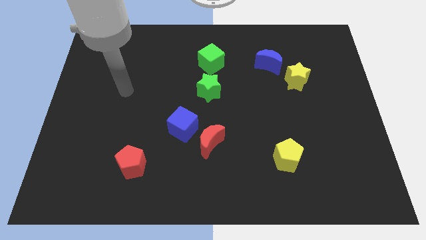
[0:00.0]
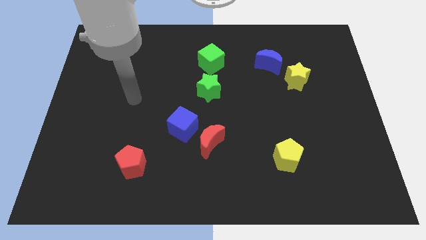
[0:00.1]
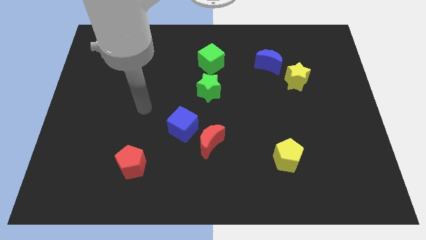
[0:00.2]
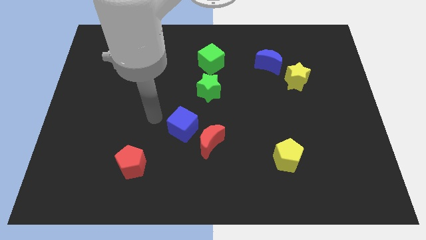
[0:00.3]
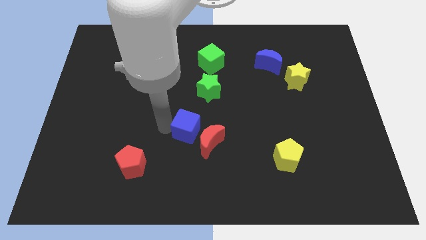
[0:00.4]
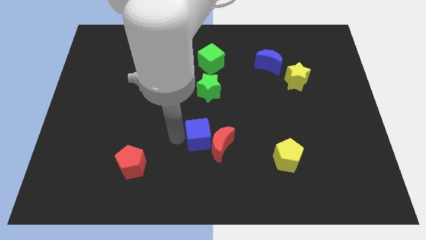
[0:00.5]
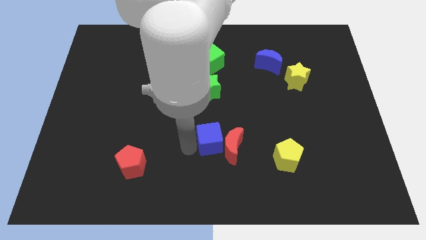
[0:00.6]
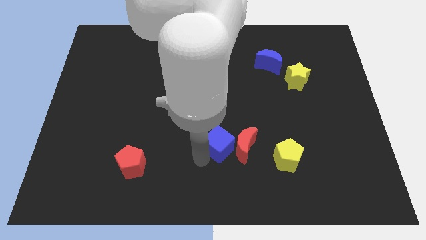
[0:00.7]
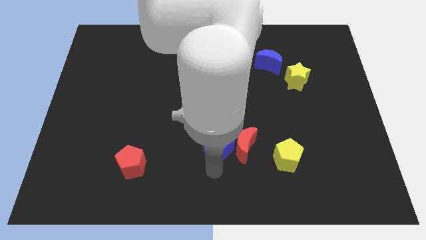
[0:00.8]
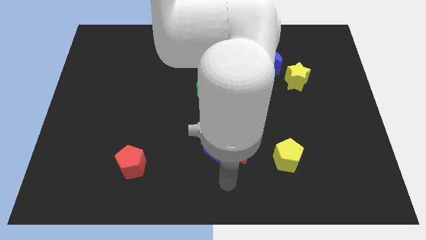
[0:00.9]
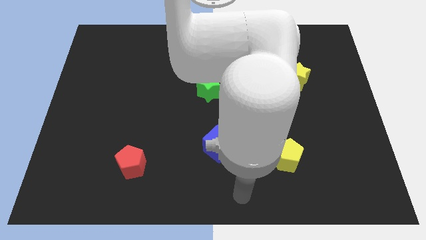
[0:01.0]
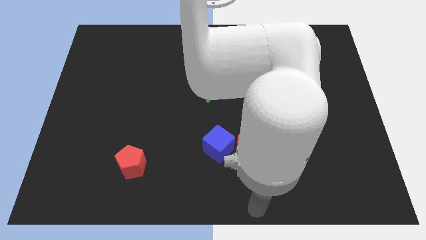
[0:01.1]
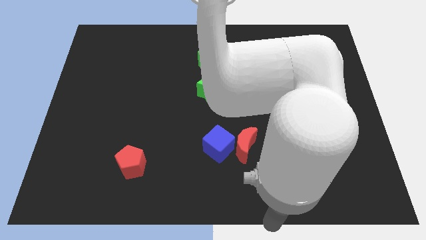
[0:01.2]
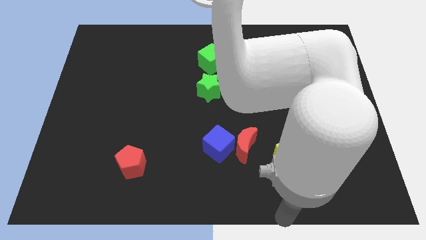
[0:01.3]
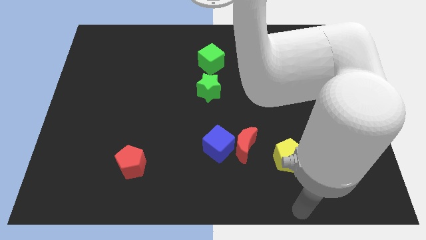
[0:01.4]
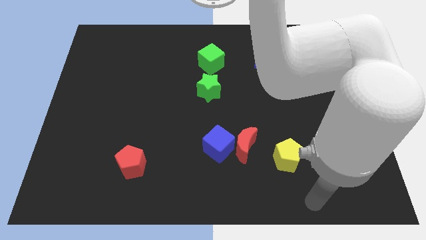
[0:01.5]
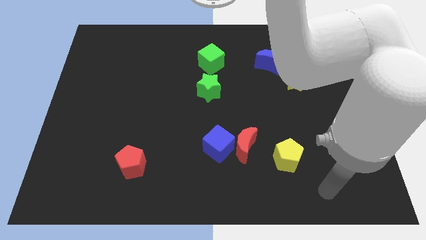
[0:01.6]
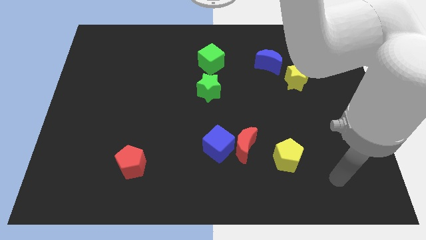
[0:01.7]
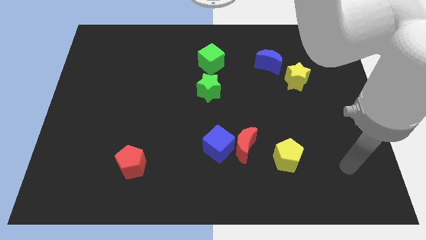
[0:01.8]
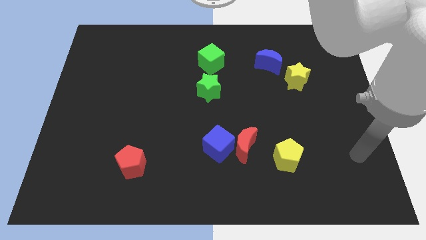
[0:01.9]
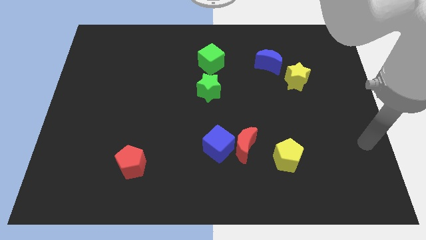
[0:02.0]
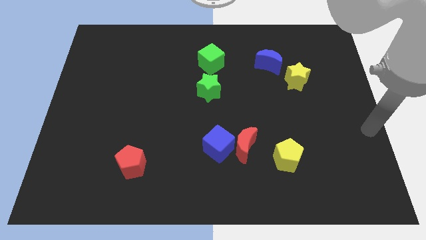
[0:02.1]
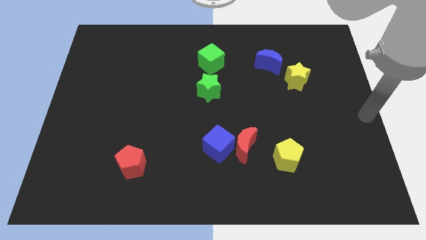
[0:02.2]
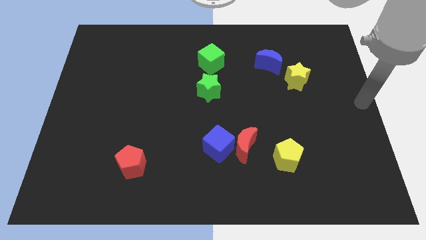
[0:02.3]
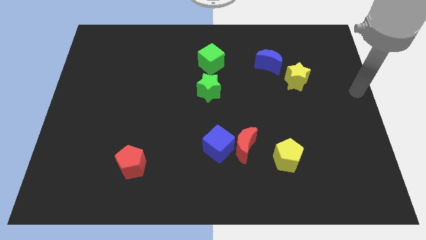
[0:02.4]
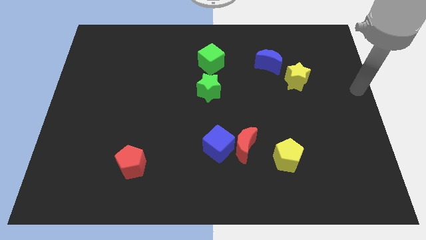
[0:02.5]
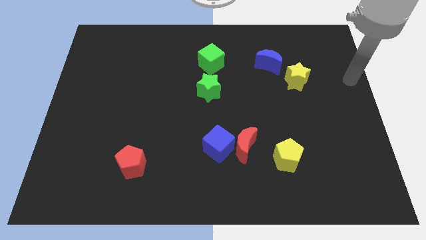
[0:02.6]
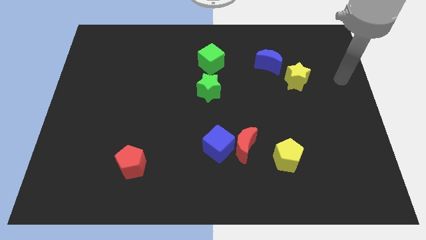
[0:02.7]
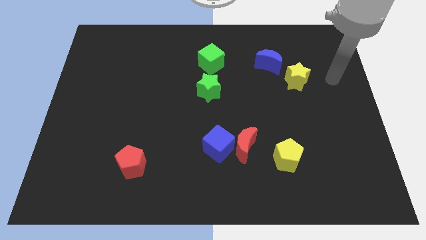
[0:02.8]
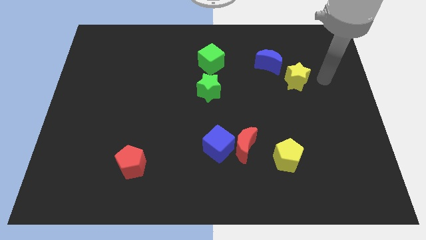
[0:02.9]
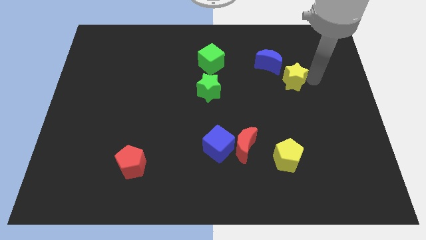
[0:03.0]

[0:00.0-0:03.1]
move your arm right to the yellow star

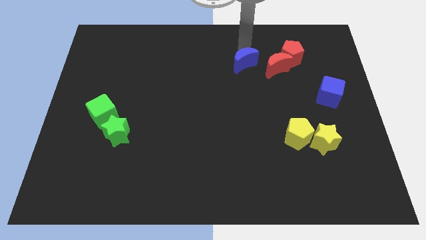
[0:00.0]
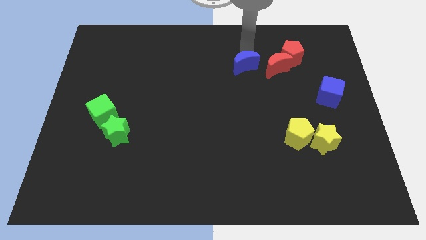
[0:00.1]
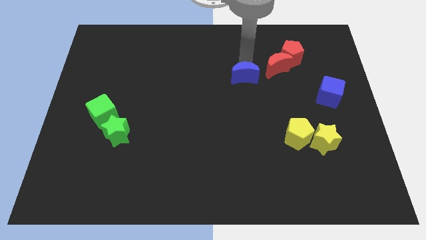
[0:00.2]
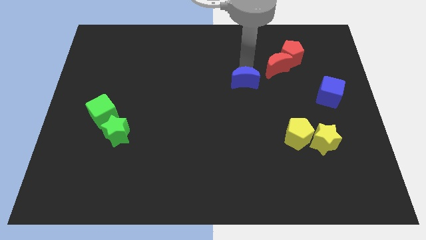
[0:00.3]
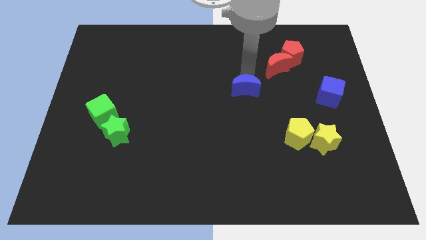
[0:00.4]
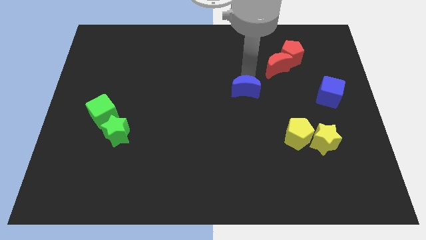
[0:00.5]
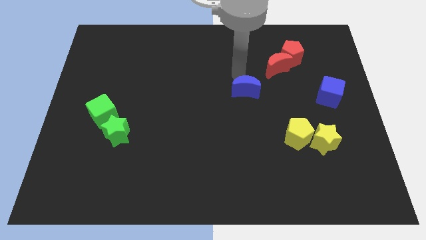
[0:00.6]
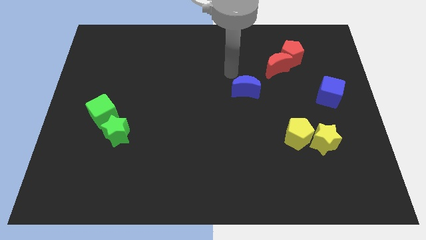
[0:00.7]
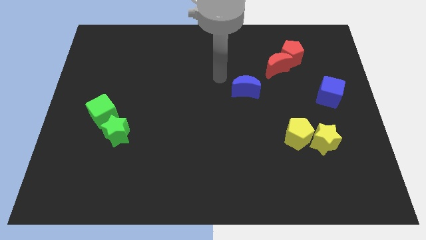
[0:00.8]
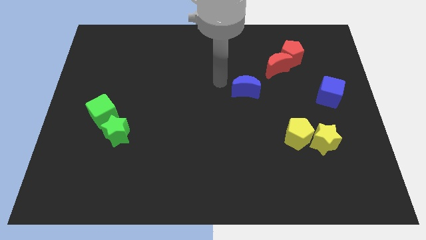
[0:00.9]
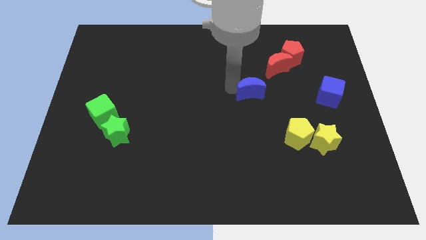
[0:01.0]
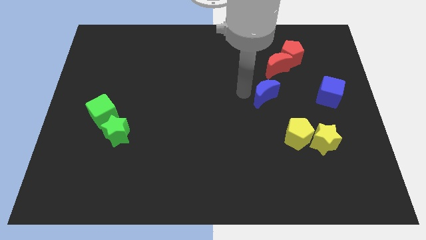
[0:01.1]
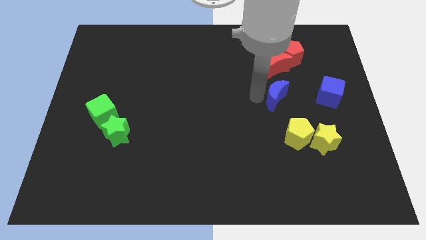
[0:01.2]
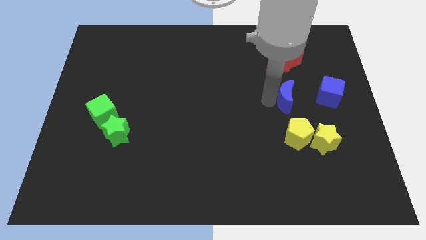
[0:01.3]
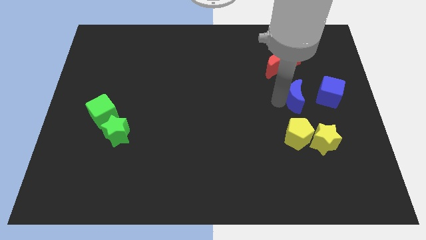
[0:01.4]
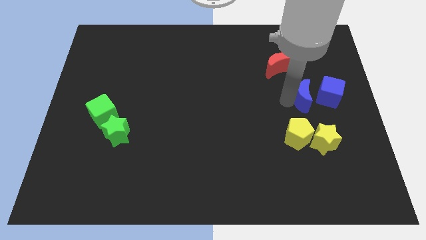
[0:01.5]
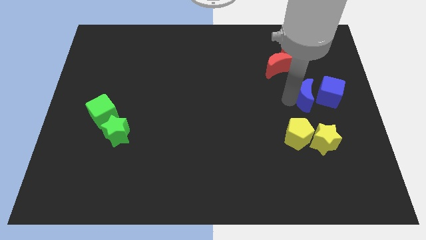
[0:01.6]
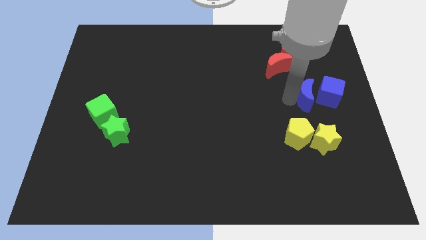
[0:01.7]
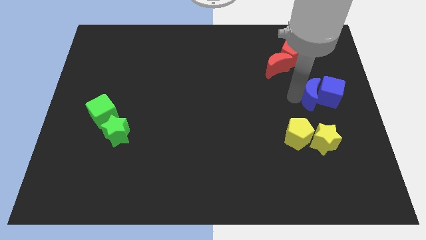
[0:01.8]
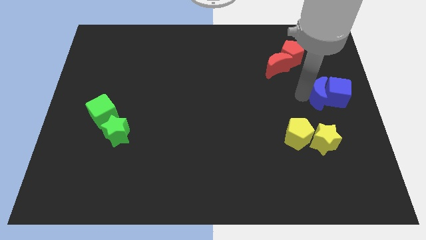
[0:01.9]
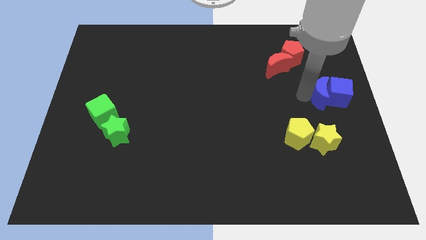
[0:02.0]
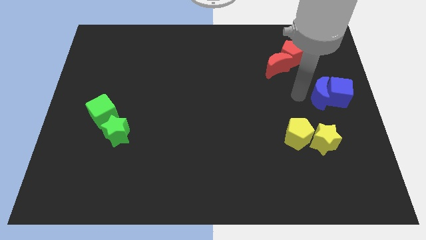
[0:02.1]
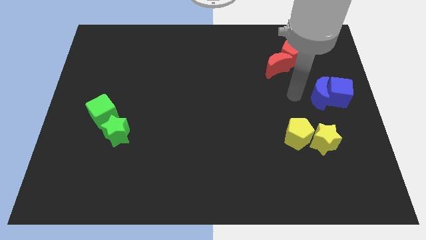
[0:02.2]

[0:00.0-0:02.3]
move the blue crescent to the left of the blue cube in the board

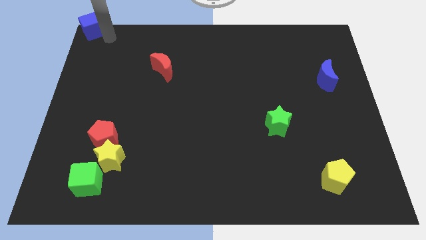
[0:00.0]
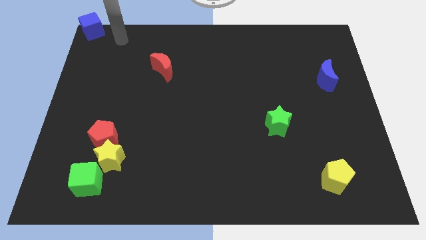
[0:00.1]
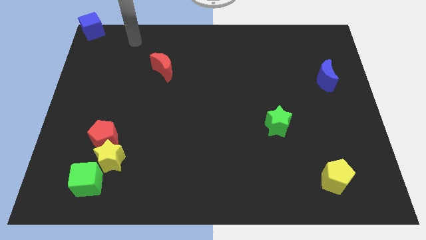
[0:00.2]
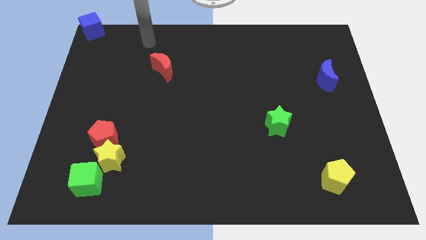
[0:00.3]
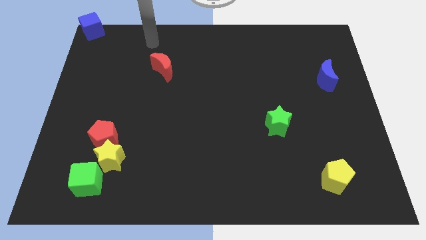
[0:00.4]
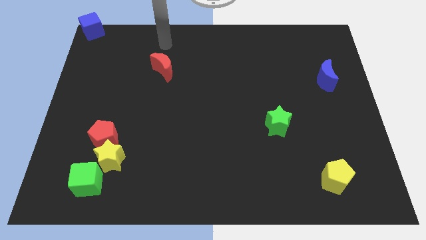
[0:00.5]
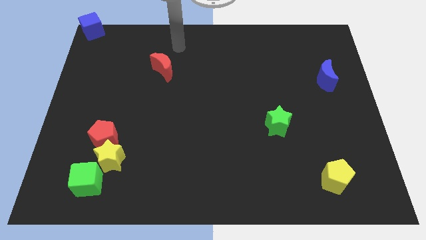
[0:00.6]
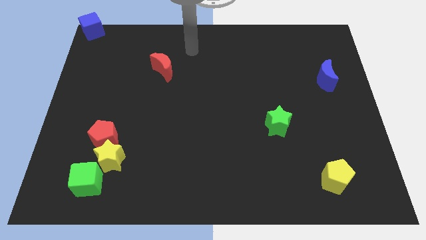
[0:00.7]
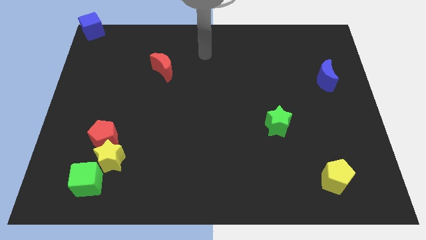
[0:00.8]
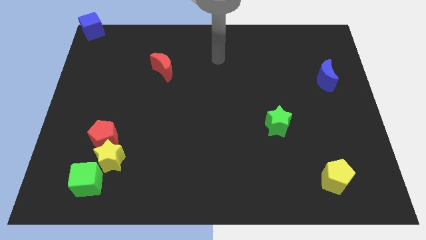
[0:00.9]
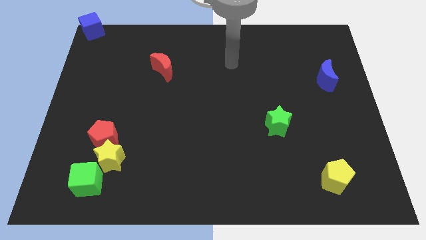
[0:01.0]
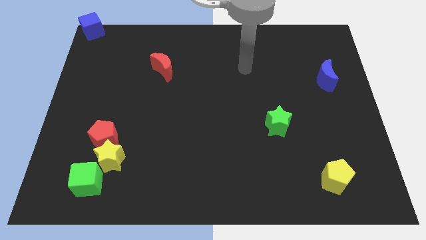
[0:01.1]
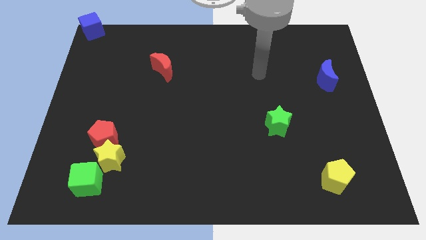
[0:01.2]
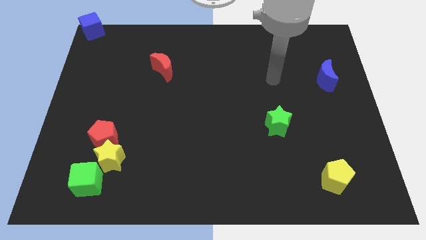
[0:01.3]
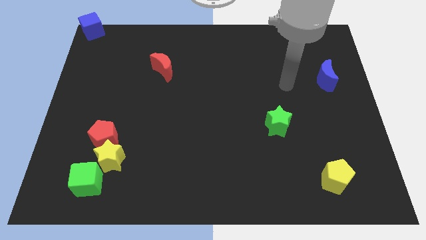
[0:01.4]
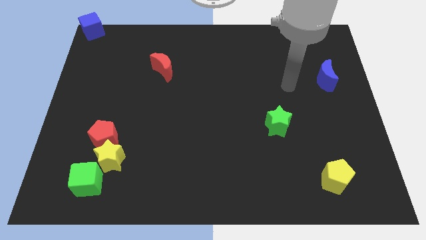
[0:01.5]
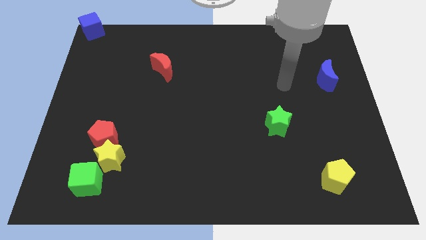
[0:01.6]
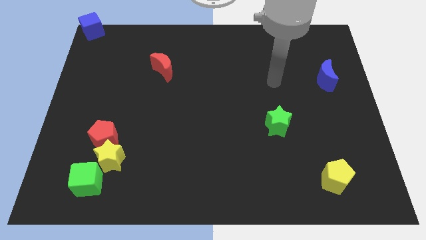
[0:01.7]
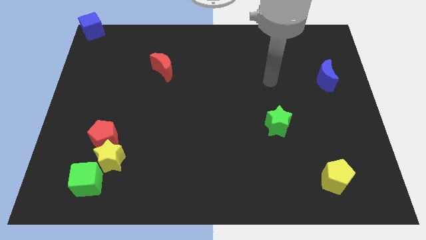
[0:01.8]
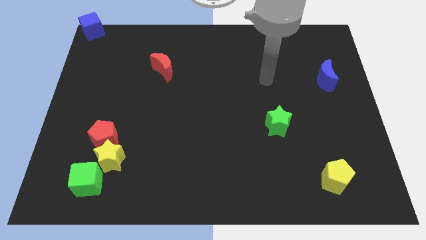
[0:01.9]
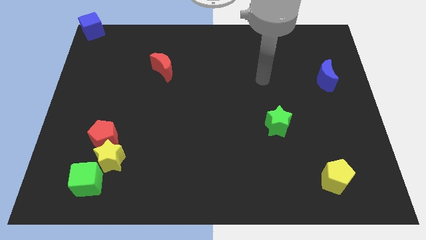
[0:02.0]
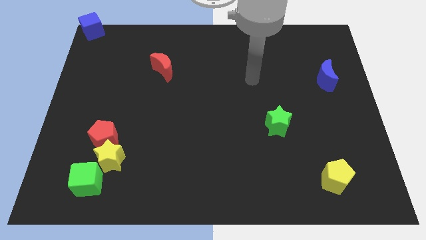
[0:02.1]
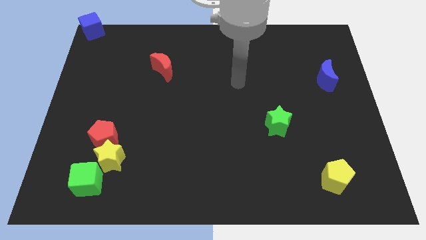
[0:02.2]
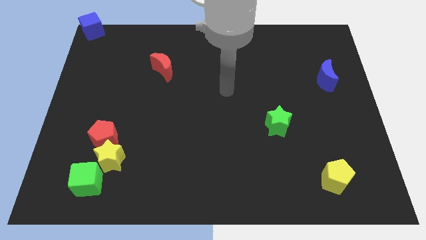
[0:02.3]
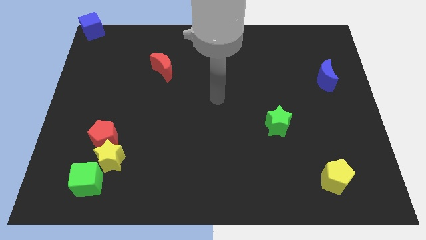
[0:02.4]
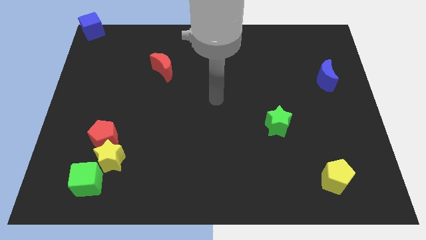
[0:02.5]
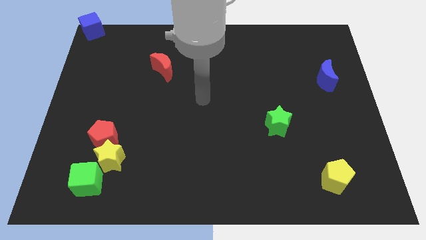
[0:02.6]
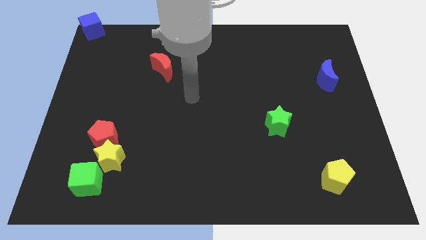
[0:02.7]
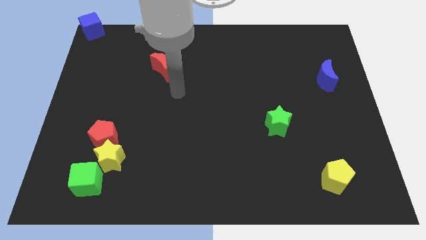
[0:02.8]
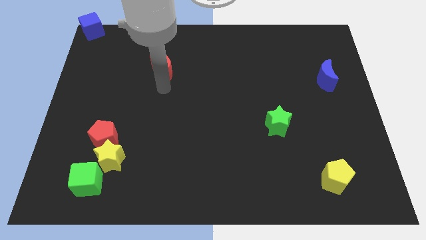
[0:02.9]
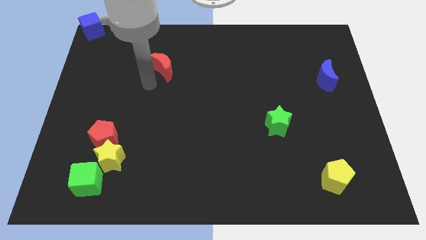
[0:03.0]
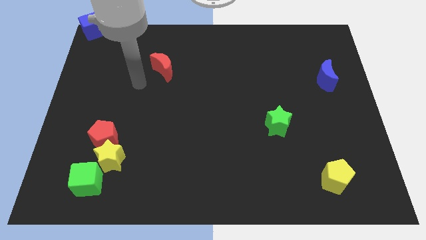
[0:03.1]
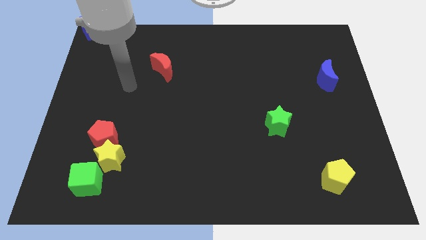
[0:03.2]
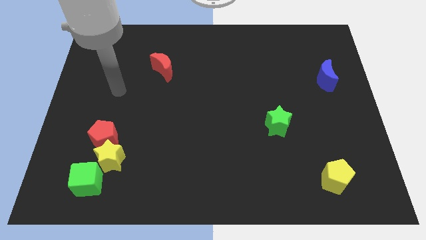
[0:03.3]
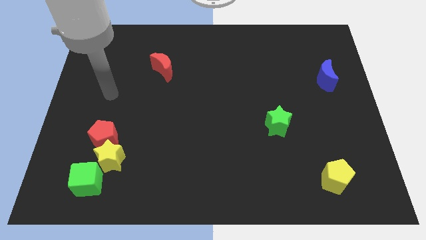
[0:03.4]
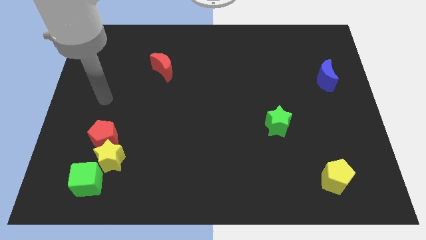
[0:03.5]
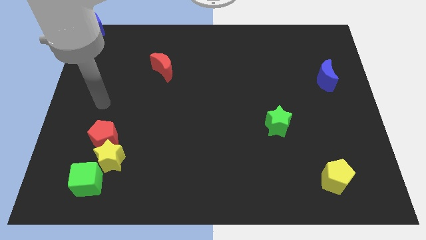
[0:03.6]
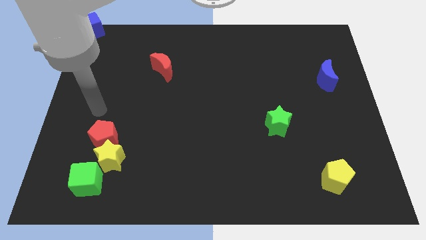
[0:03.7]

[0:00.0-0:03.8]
move your arm to the top of the red pentagon
